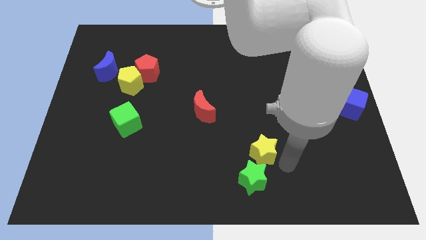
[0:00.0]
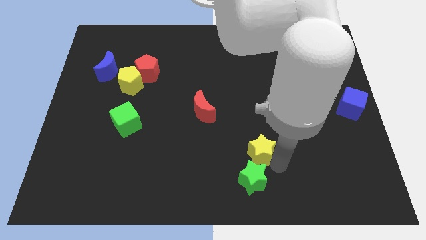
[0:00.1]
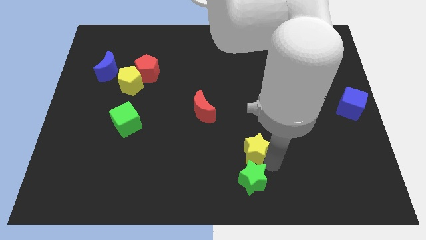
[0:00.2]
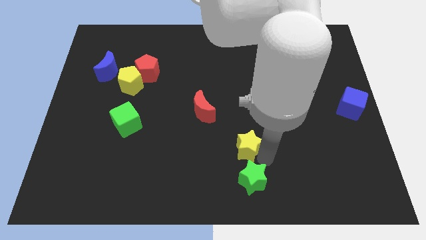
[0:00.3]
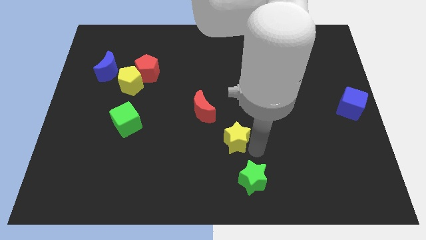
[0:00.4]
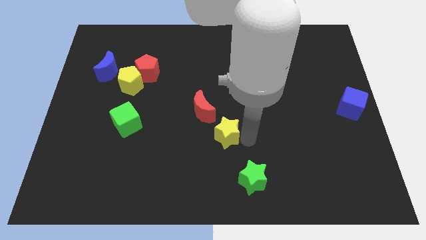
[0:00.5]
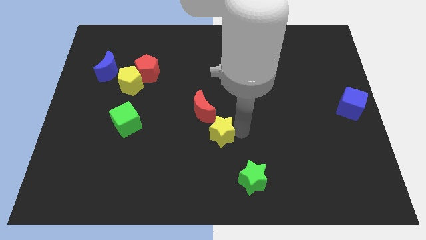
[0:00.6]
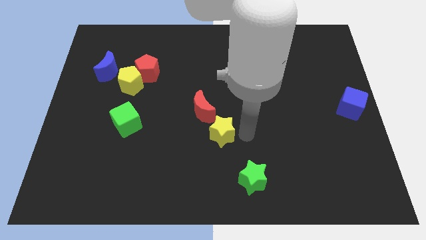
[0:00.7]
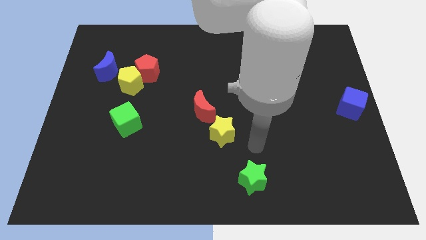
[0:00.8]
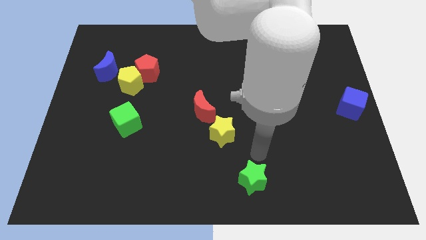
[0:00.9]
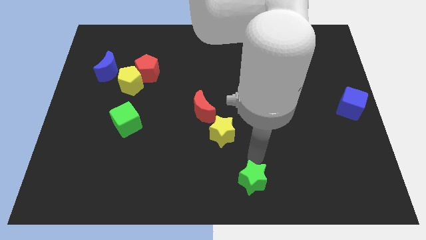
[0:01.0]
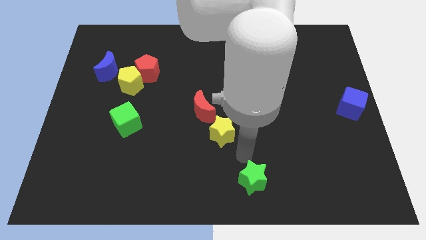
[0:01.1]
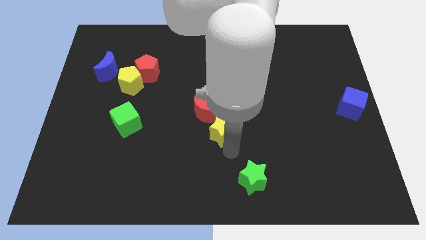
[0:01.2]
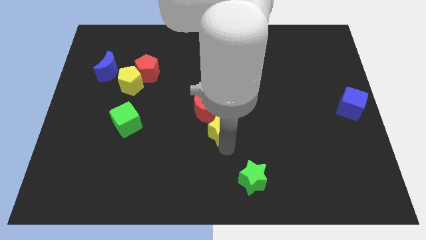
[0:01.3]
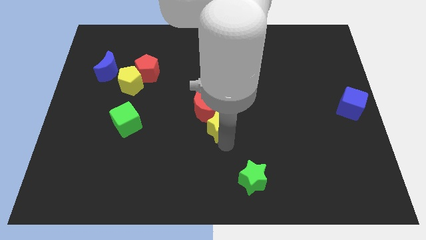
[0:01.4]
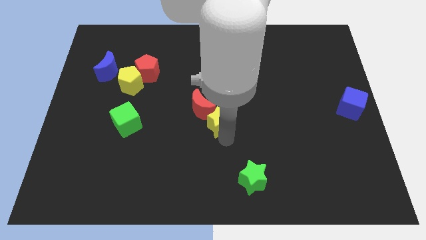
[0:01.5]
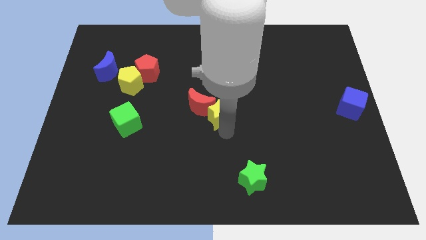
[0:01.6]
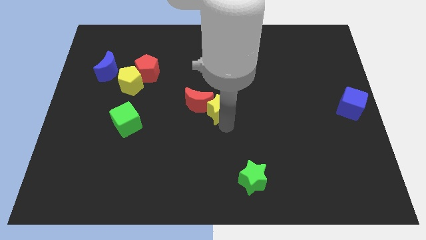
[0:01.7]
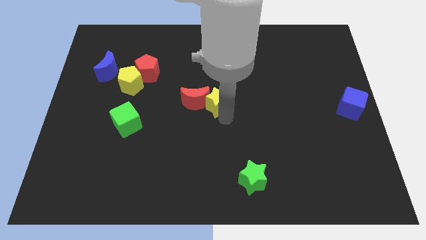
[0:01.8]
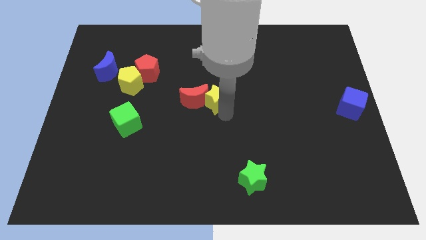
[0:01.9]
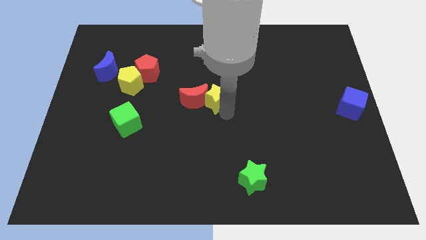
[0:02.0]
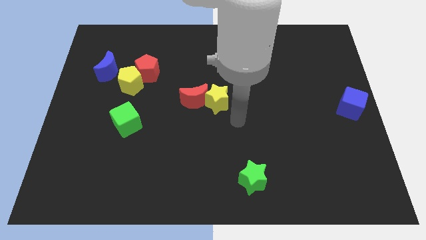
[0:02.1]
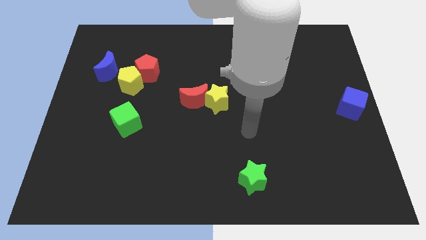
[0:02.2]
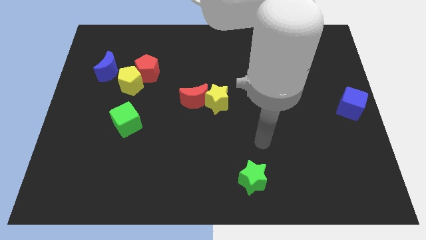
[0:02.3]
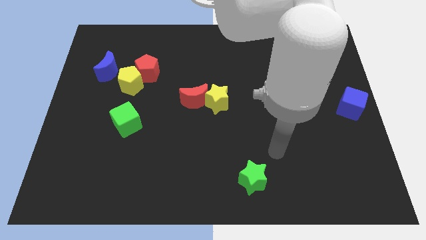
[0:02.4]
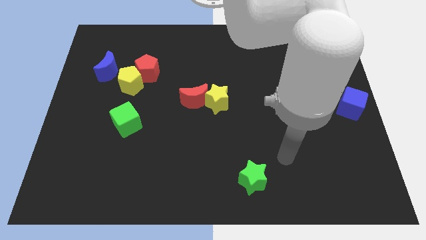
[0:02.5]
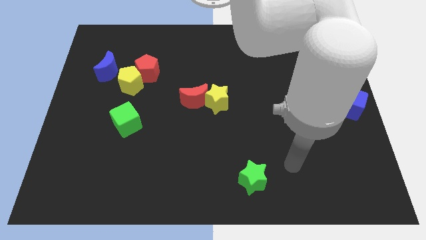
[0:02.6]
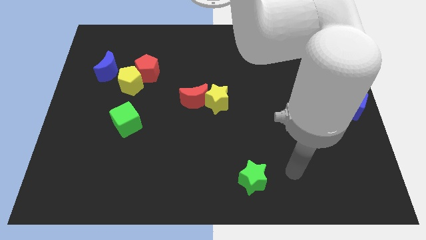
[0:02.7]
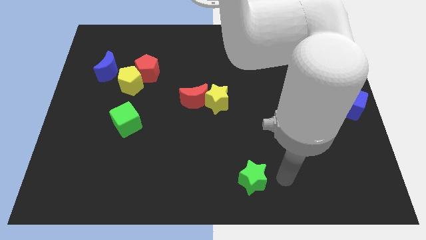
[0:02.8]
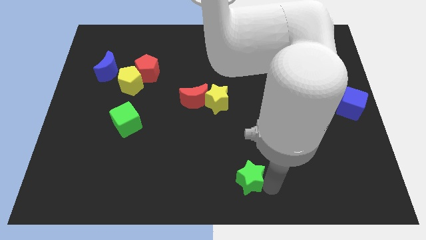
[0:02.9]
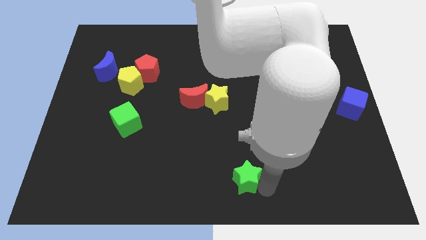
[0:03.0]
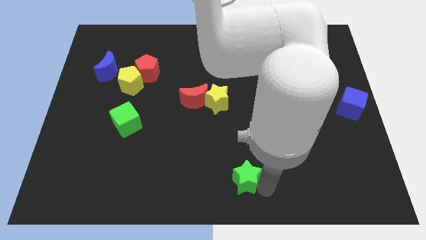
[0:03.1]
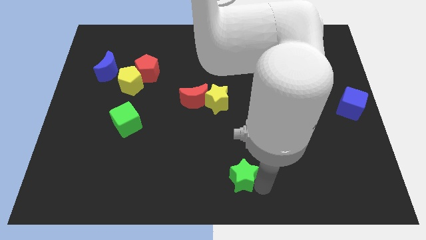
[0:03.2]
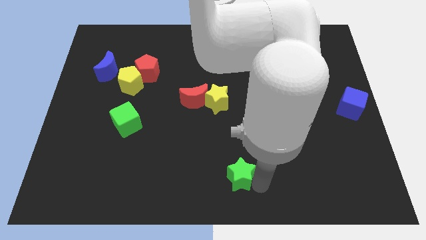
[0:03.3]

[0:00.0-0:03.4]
move yellow star into red moon

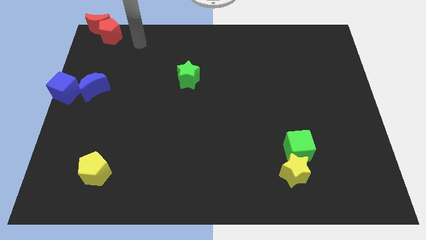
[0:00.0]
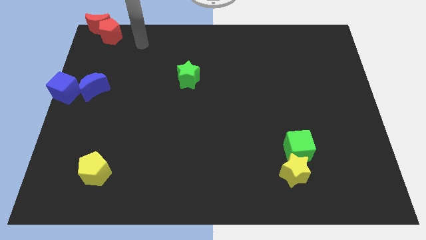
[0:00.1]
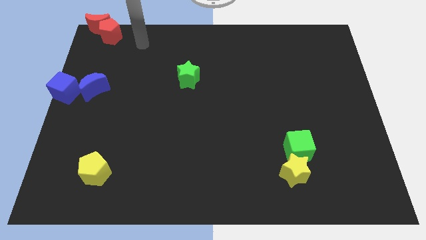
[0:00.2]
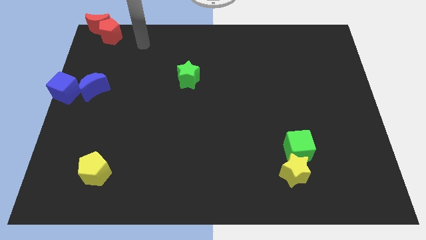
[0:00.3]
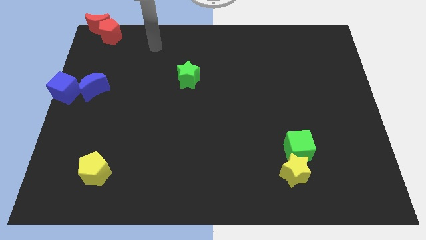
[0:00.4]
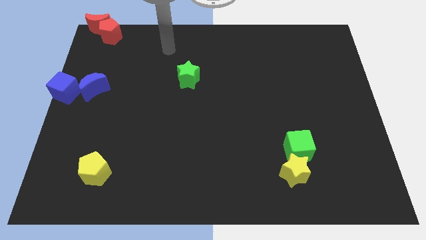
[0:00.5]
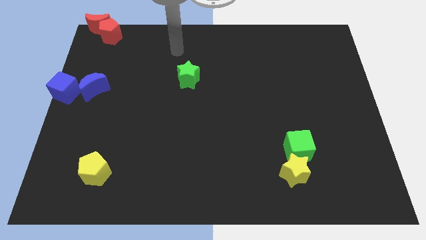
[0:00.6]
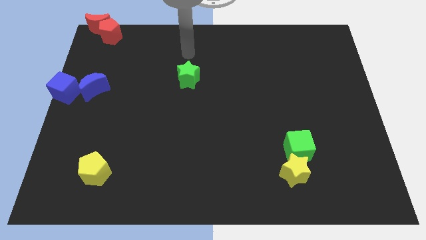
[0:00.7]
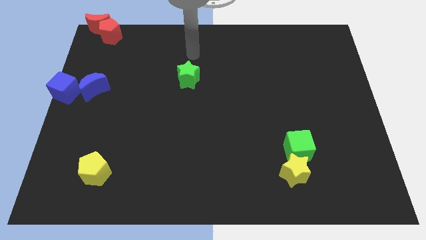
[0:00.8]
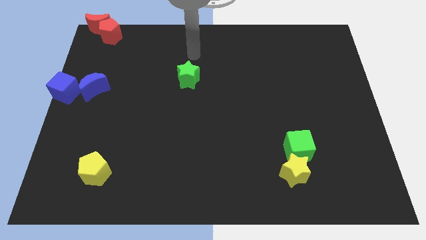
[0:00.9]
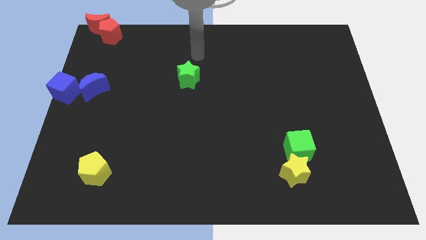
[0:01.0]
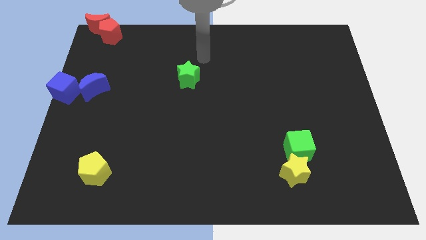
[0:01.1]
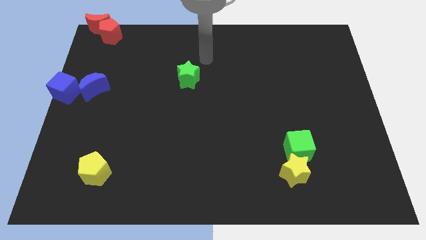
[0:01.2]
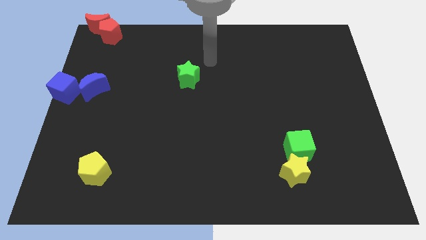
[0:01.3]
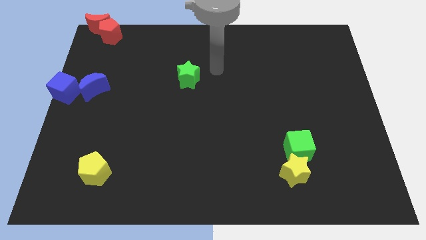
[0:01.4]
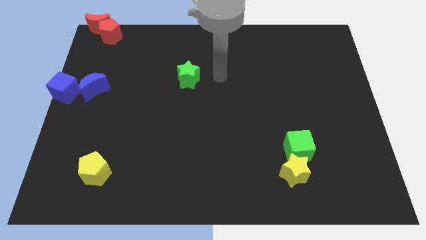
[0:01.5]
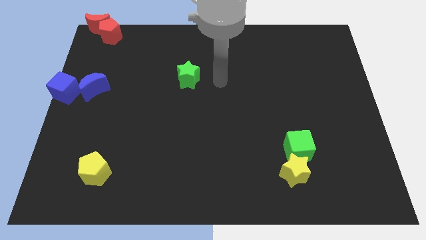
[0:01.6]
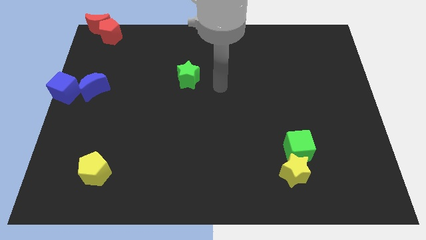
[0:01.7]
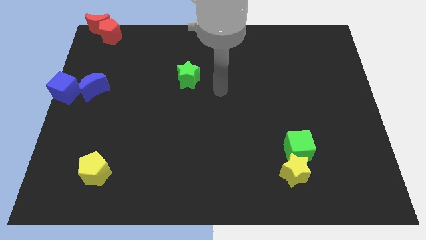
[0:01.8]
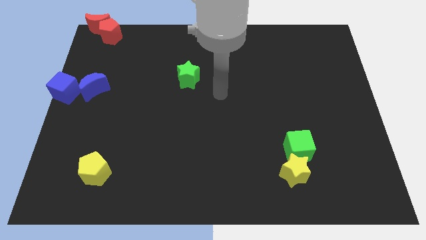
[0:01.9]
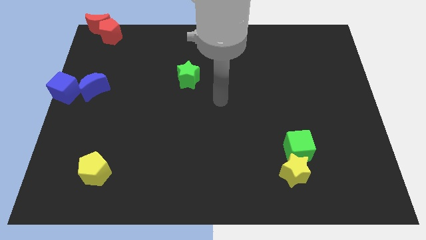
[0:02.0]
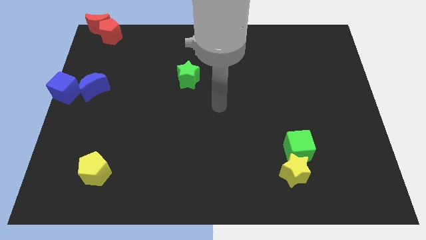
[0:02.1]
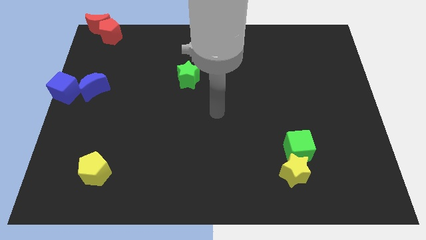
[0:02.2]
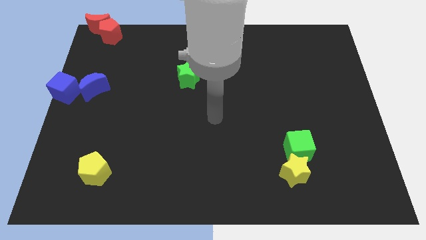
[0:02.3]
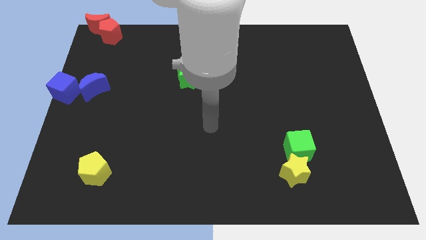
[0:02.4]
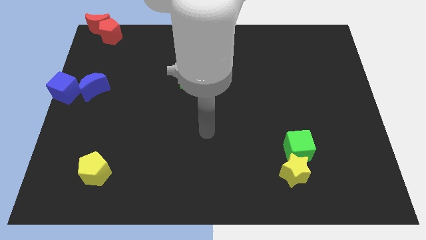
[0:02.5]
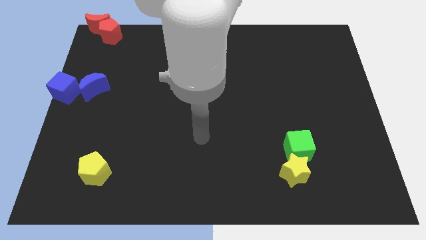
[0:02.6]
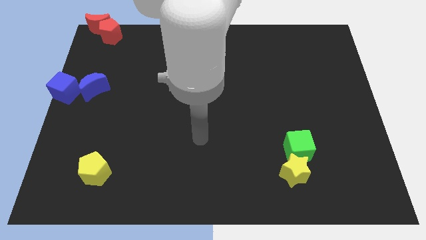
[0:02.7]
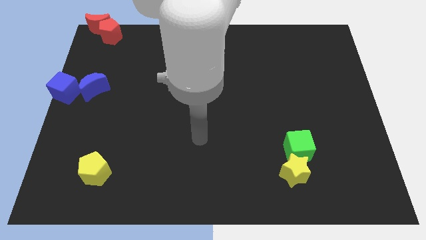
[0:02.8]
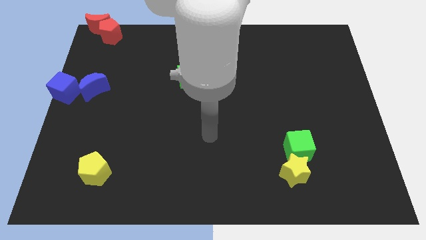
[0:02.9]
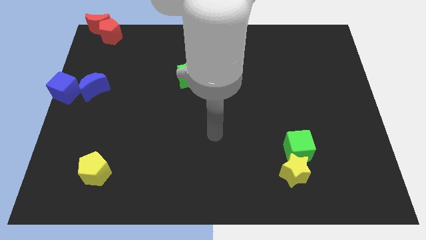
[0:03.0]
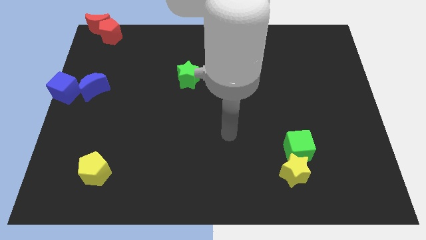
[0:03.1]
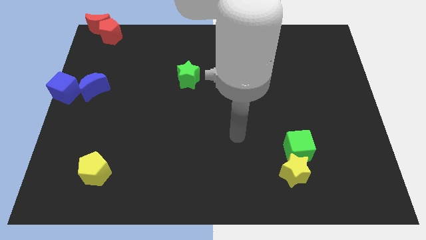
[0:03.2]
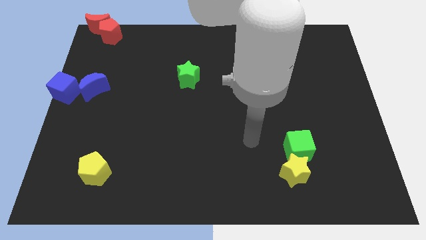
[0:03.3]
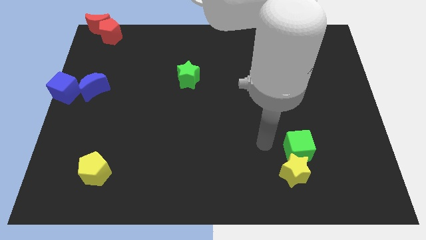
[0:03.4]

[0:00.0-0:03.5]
move your arm and point to the left of green cube

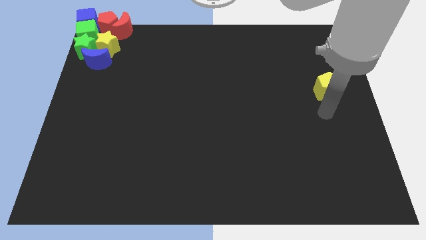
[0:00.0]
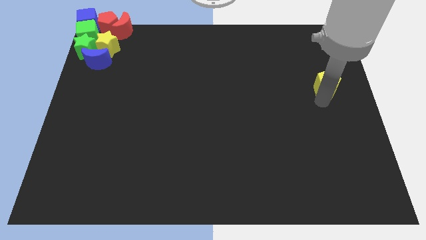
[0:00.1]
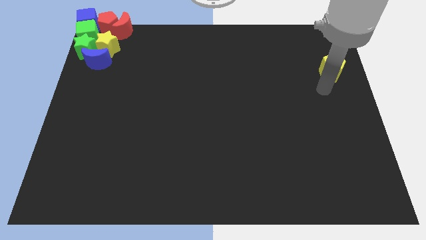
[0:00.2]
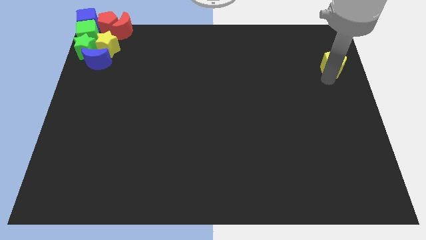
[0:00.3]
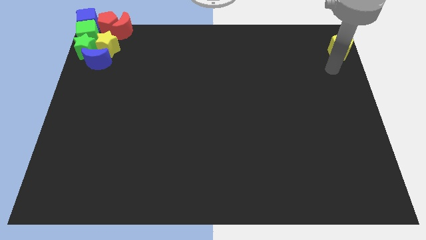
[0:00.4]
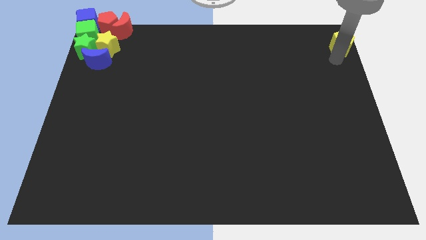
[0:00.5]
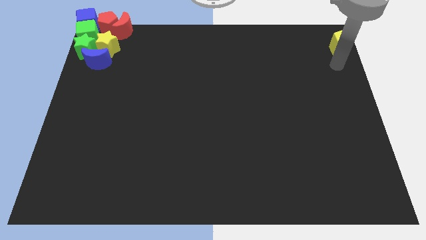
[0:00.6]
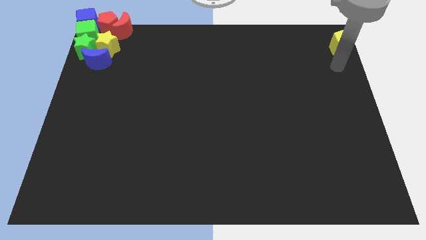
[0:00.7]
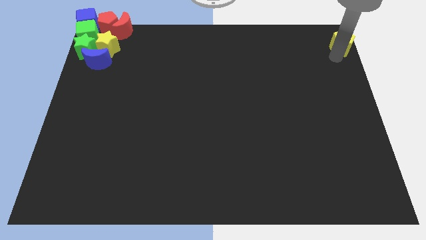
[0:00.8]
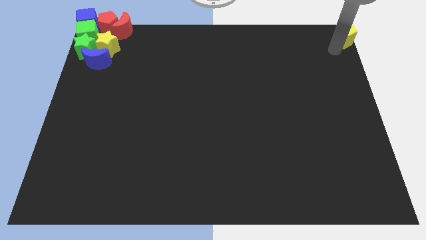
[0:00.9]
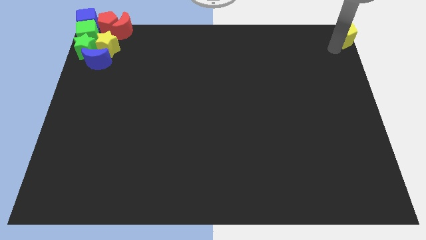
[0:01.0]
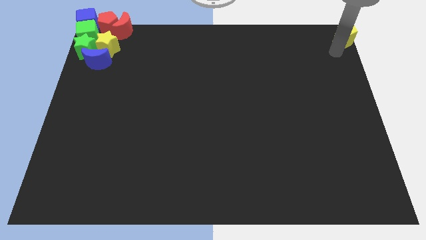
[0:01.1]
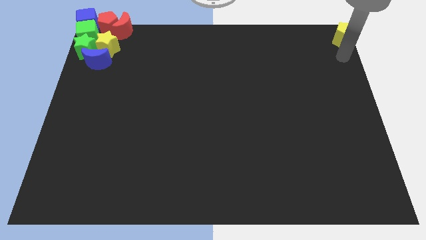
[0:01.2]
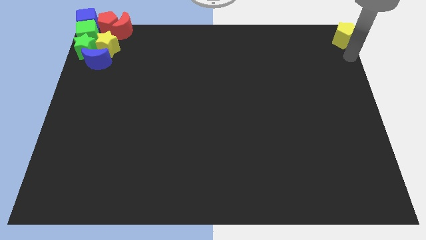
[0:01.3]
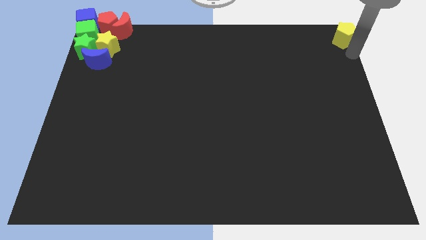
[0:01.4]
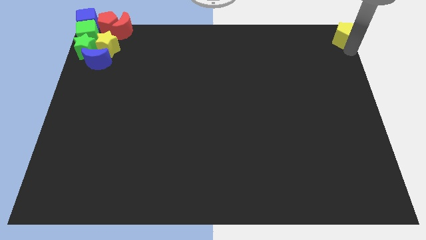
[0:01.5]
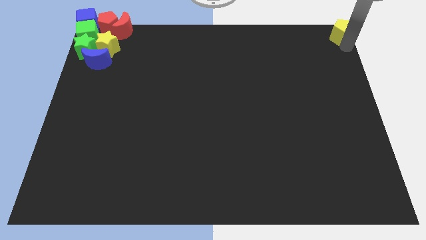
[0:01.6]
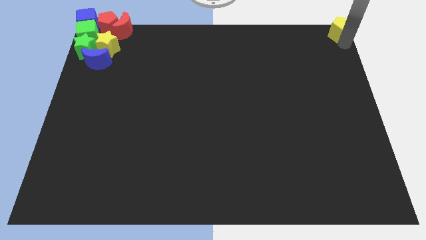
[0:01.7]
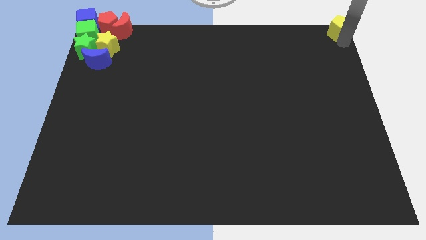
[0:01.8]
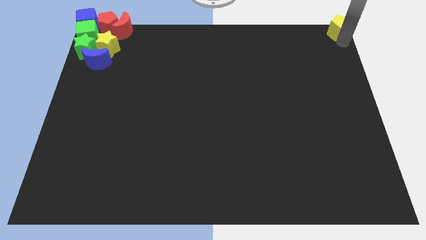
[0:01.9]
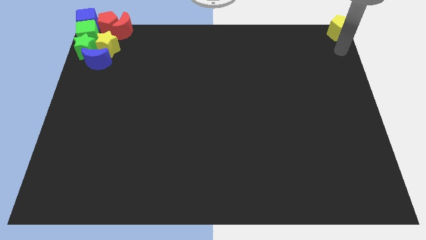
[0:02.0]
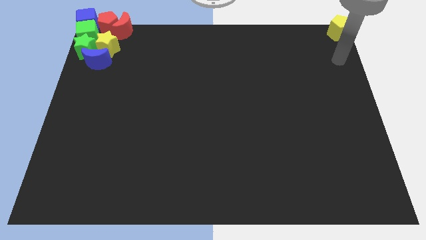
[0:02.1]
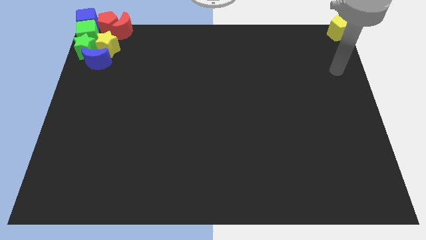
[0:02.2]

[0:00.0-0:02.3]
move yellow pentagon slightly to the top right corner
